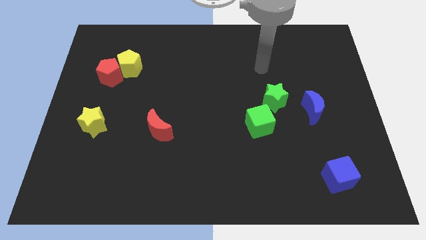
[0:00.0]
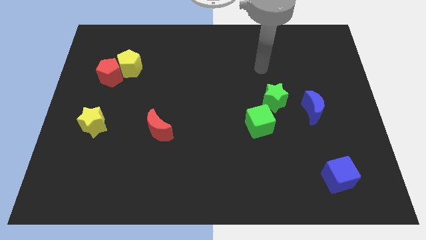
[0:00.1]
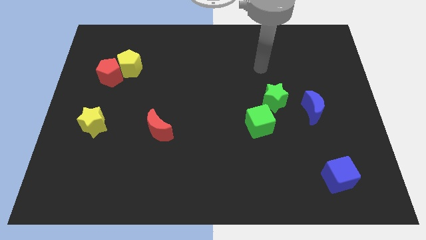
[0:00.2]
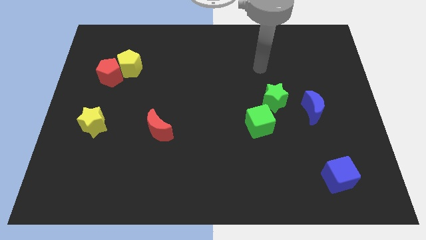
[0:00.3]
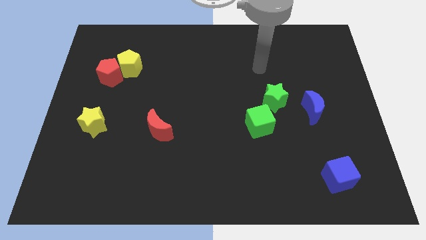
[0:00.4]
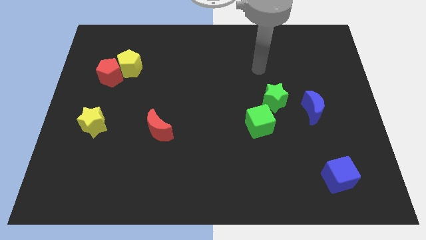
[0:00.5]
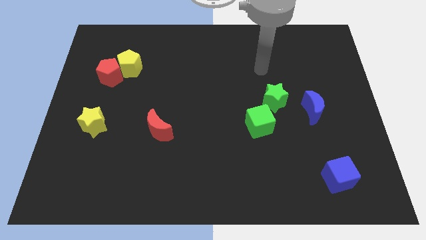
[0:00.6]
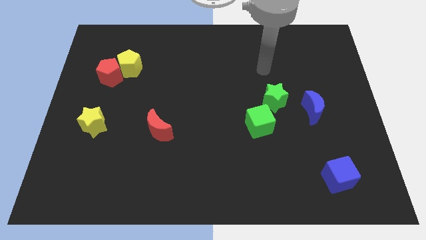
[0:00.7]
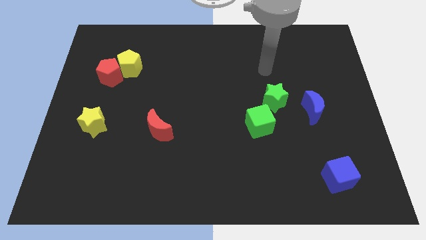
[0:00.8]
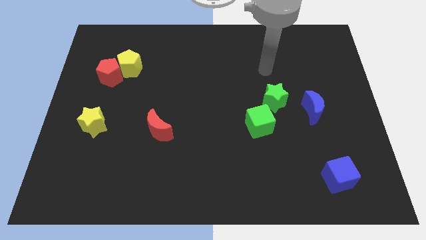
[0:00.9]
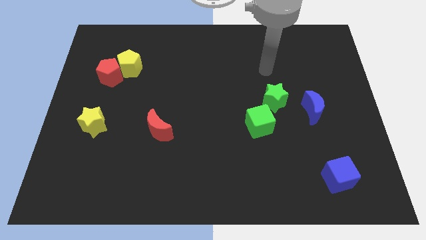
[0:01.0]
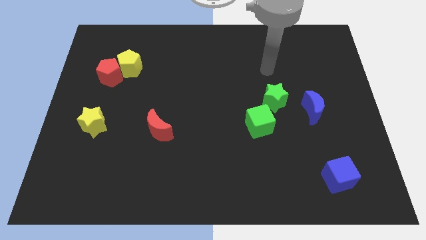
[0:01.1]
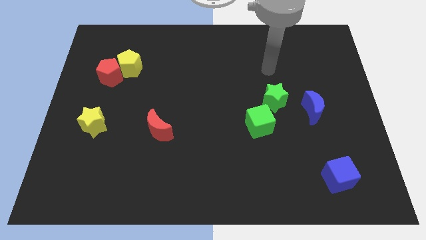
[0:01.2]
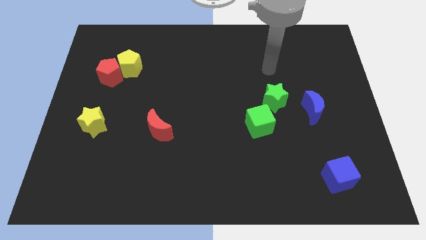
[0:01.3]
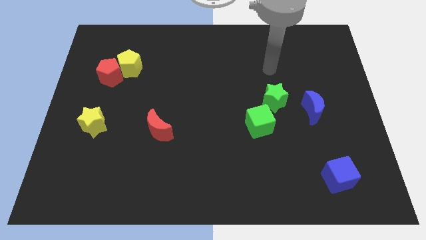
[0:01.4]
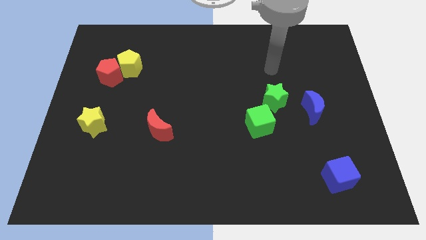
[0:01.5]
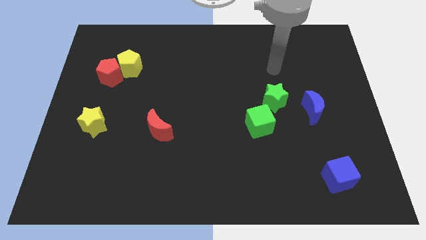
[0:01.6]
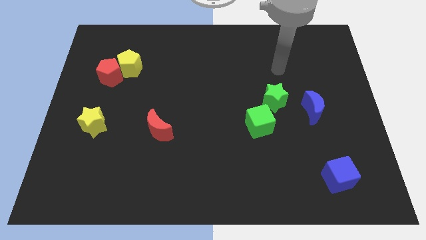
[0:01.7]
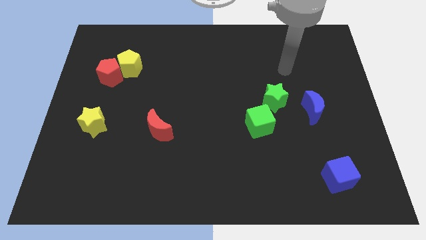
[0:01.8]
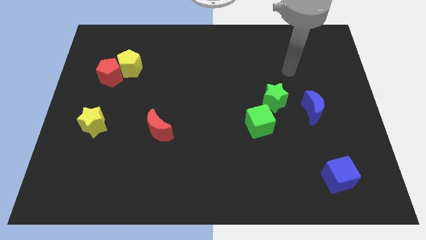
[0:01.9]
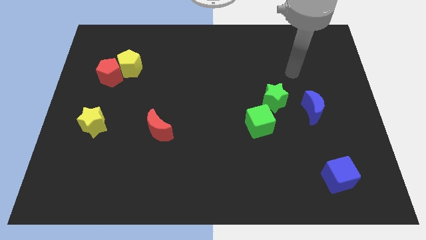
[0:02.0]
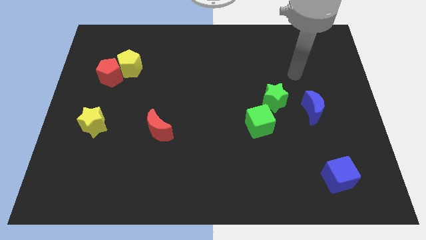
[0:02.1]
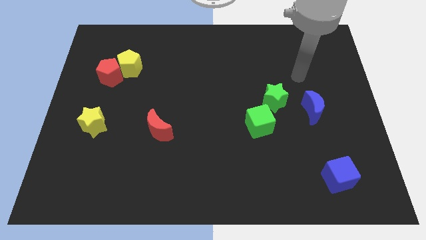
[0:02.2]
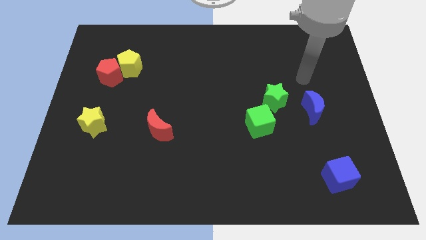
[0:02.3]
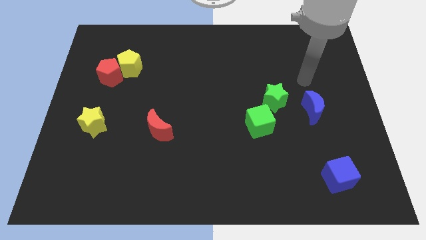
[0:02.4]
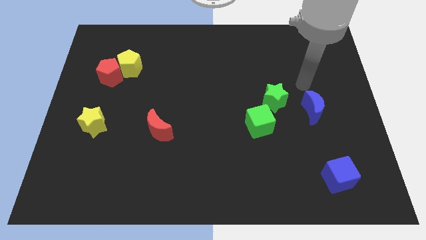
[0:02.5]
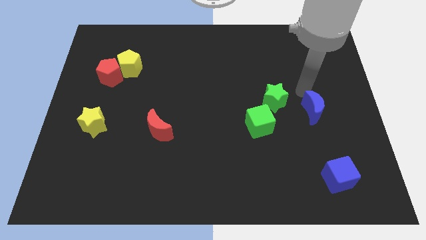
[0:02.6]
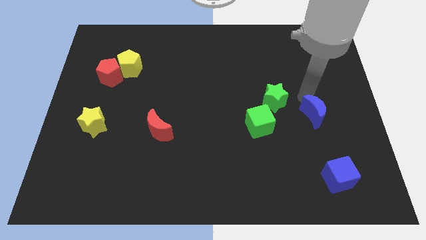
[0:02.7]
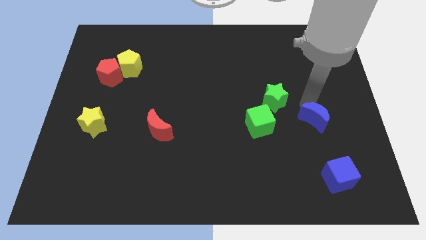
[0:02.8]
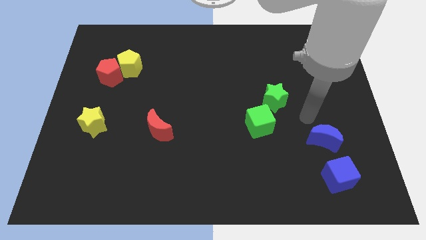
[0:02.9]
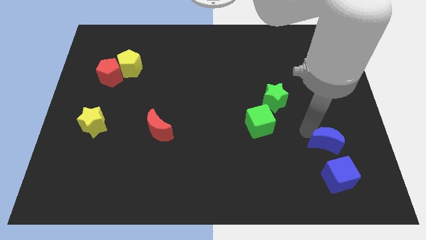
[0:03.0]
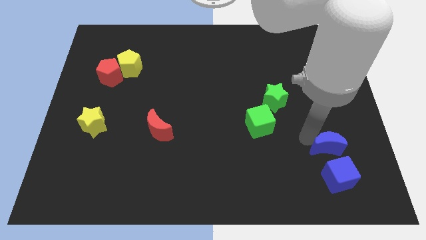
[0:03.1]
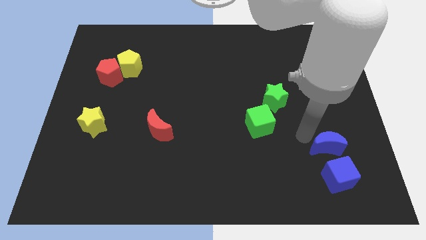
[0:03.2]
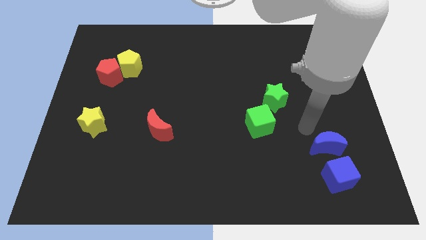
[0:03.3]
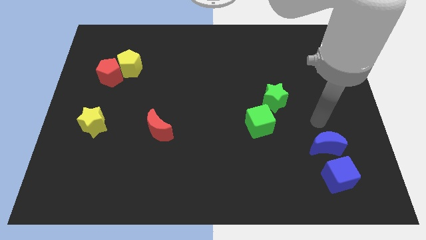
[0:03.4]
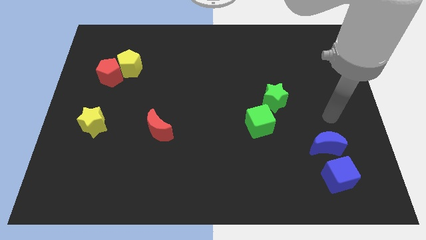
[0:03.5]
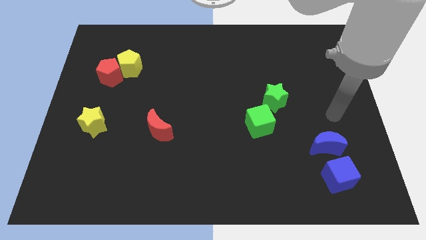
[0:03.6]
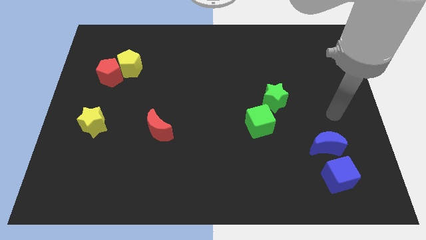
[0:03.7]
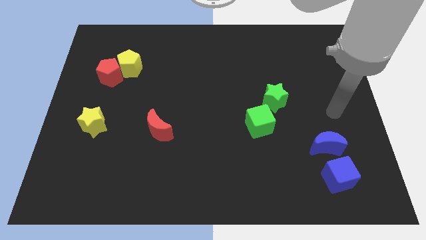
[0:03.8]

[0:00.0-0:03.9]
move the blue crescent slightly closer to the blue cube

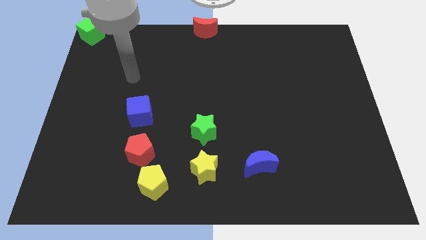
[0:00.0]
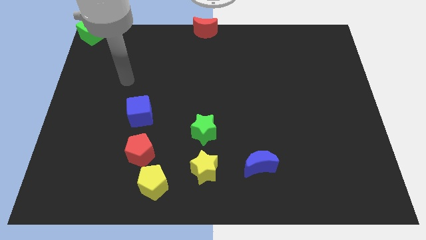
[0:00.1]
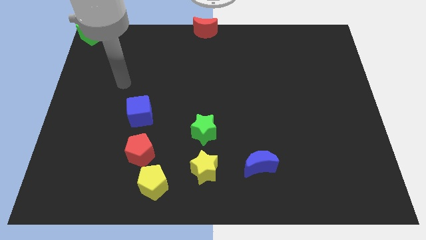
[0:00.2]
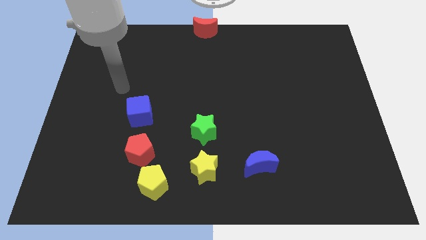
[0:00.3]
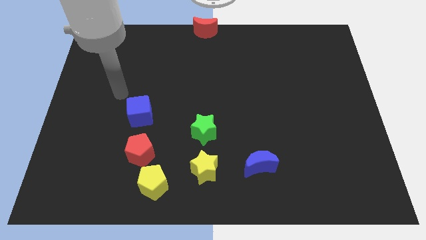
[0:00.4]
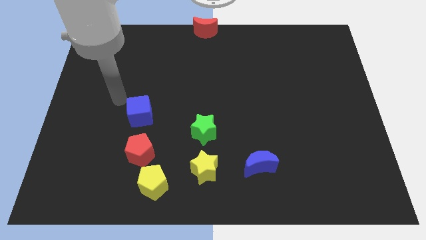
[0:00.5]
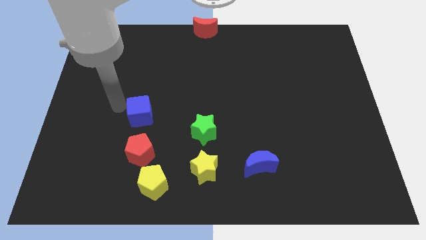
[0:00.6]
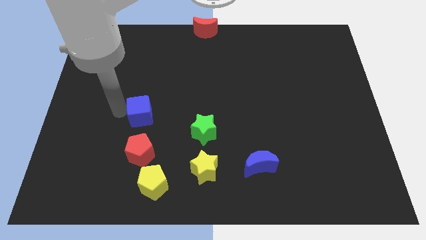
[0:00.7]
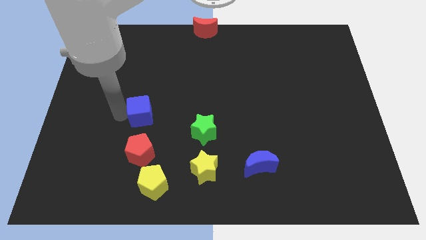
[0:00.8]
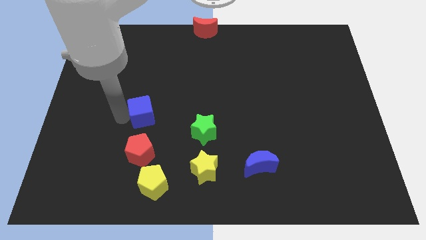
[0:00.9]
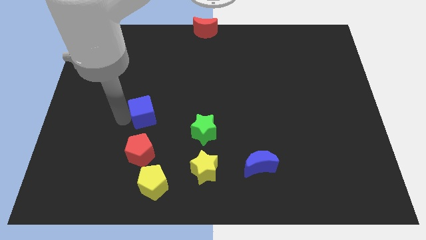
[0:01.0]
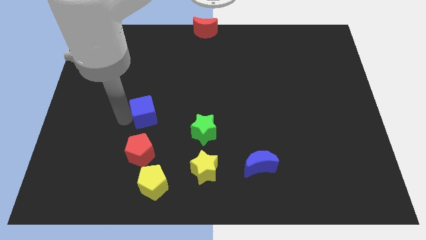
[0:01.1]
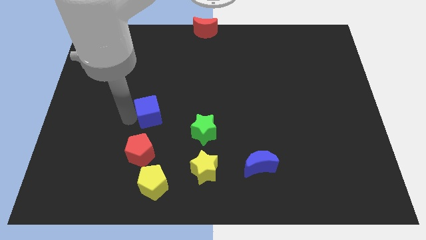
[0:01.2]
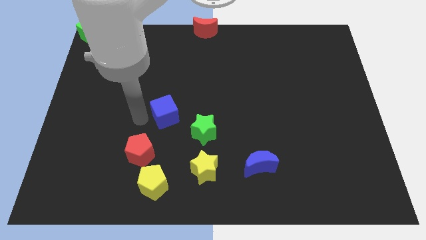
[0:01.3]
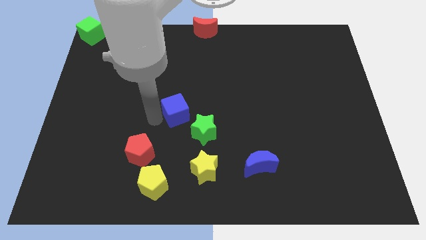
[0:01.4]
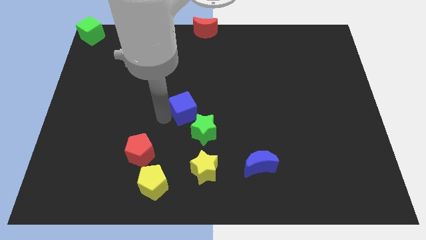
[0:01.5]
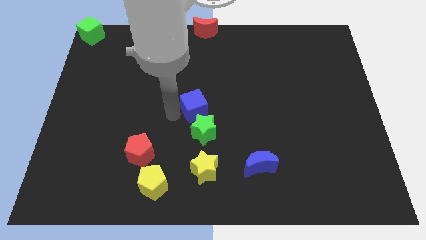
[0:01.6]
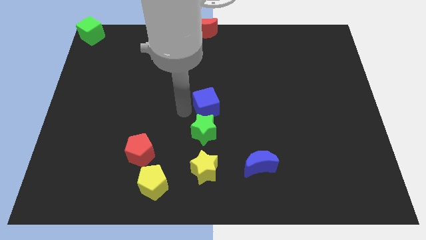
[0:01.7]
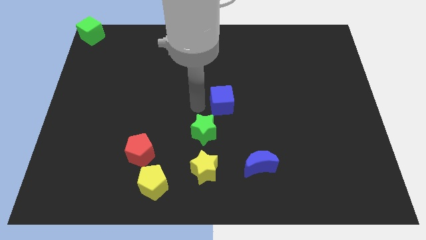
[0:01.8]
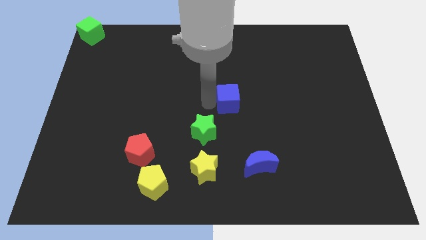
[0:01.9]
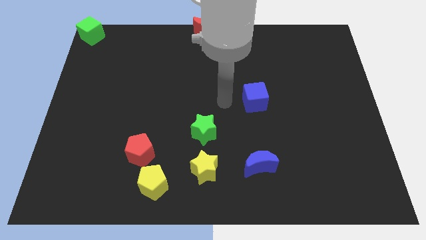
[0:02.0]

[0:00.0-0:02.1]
drag the blue cube diagonally top right to the green star

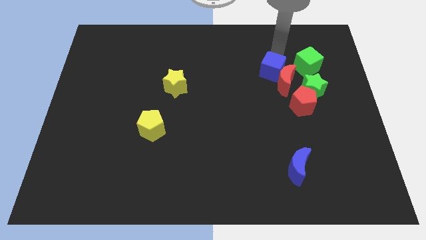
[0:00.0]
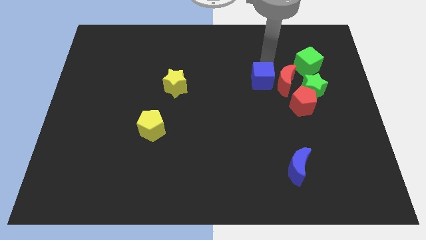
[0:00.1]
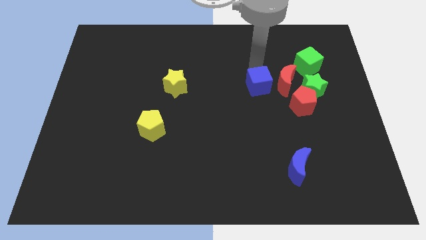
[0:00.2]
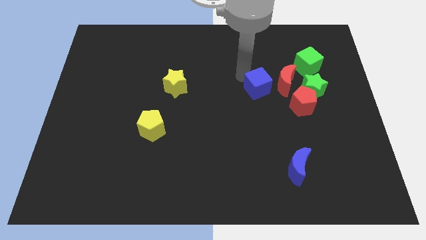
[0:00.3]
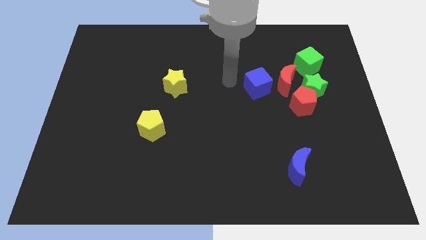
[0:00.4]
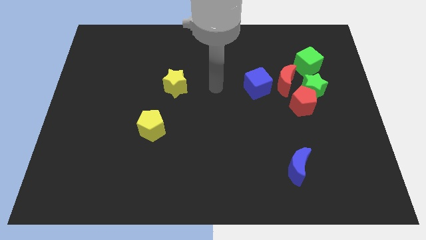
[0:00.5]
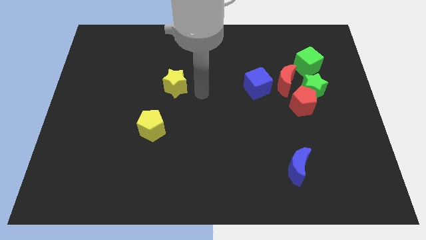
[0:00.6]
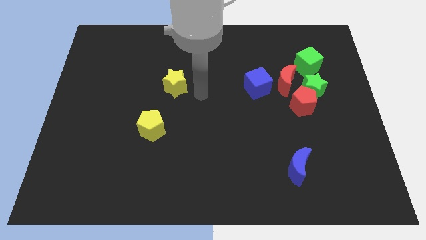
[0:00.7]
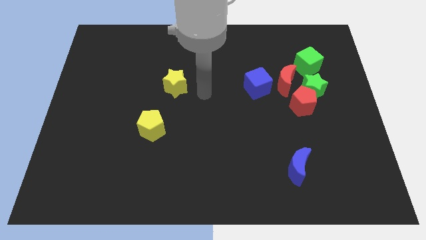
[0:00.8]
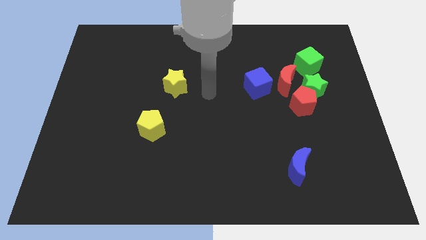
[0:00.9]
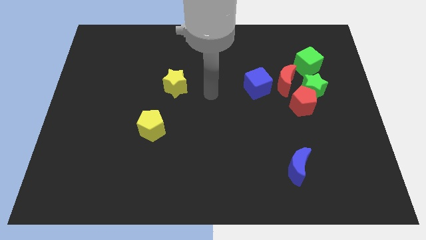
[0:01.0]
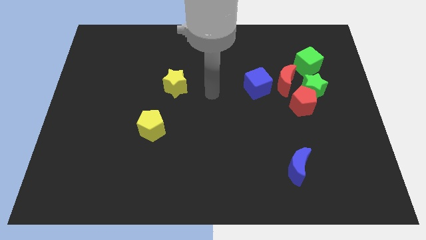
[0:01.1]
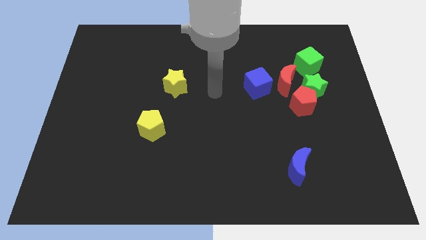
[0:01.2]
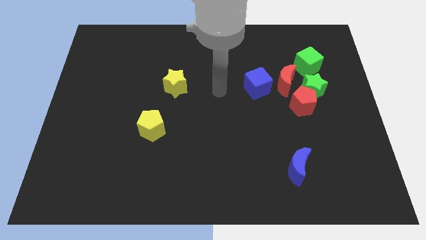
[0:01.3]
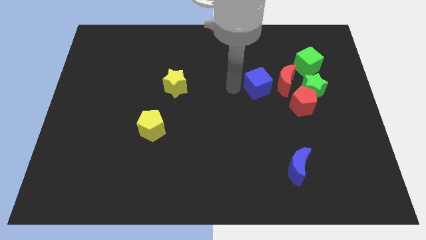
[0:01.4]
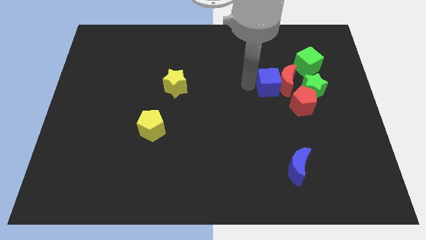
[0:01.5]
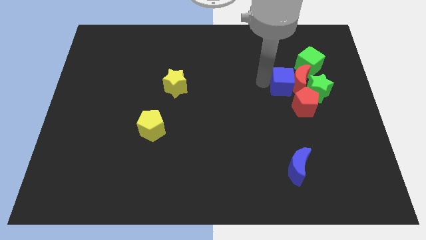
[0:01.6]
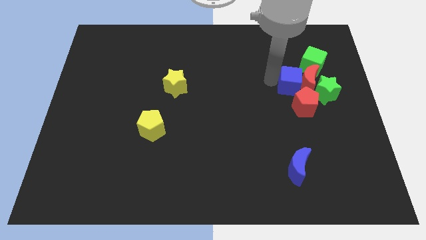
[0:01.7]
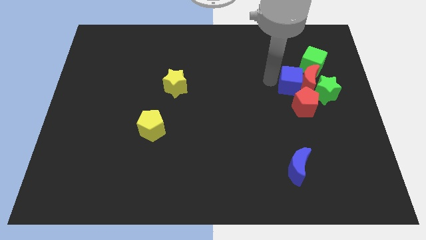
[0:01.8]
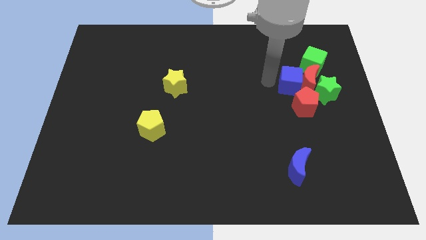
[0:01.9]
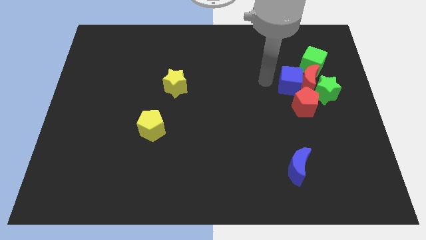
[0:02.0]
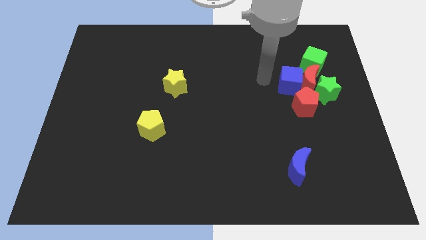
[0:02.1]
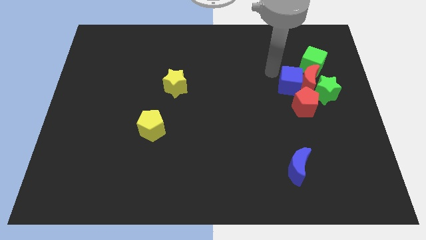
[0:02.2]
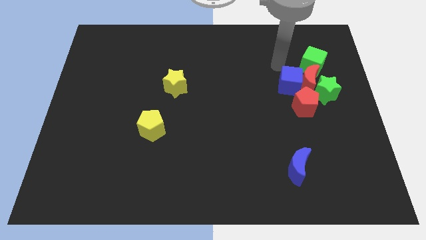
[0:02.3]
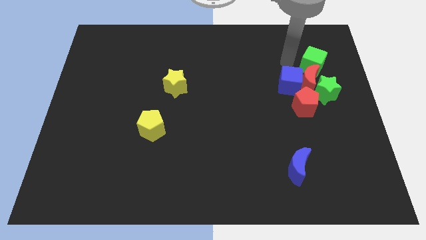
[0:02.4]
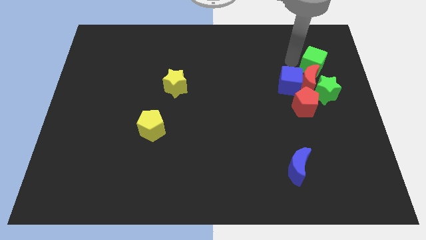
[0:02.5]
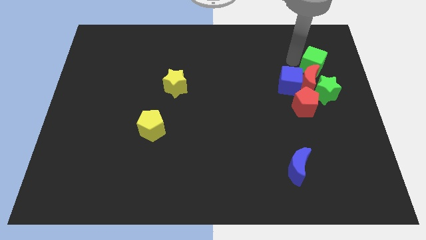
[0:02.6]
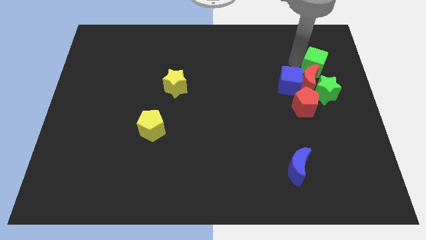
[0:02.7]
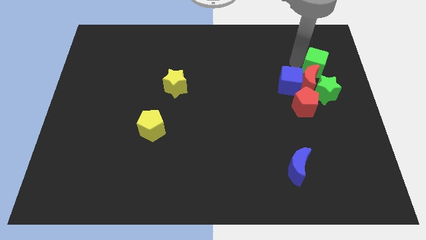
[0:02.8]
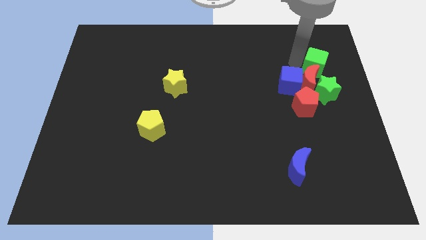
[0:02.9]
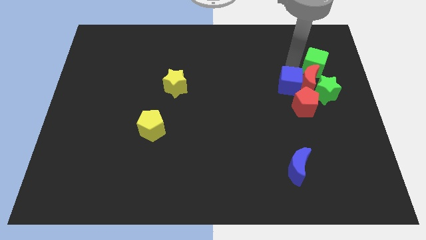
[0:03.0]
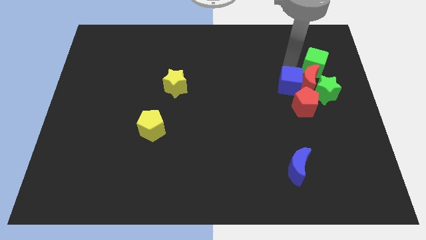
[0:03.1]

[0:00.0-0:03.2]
make a group of green blocksred blocks and blue cube
